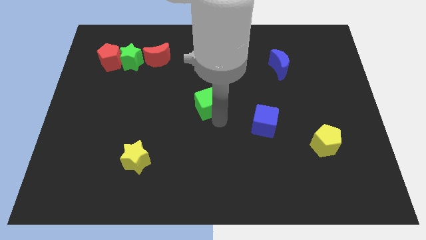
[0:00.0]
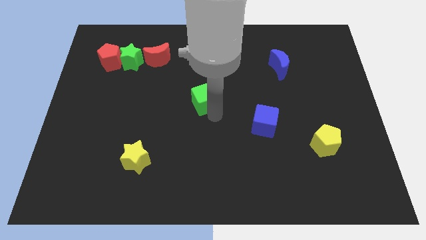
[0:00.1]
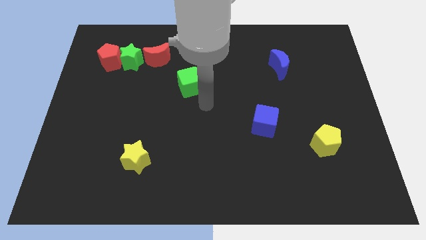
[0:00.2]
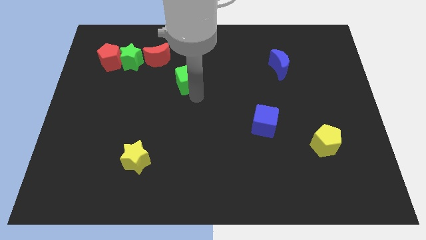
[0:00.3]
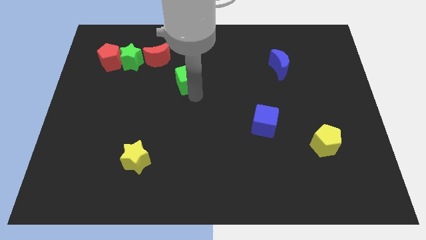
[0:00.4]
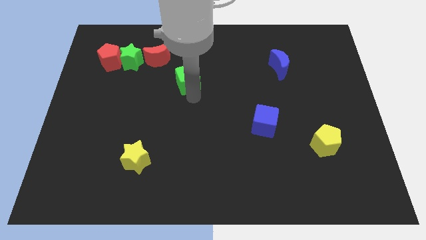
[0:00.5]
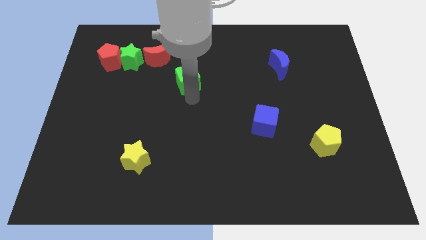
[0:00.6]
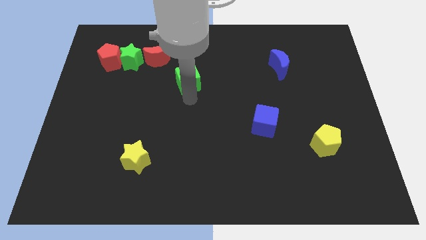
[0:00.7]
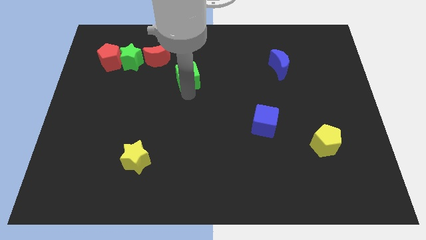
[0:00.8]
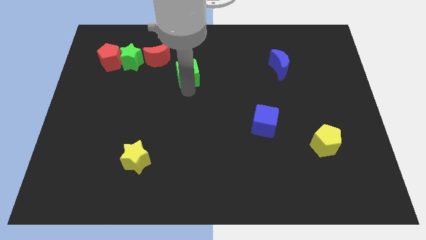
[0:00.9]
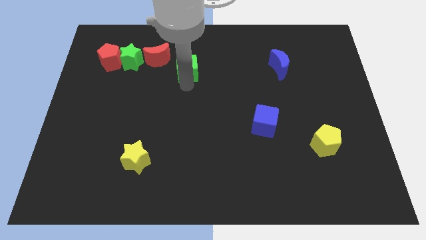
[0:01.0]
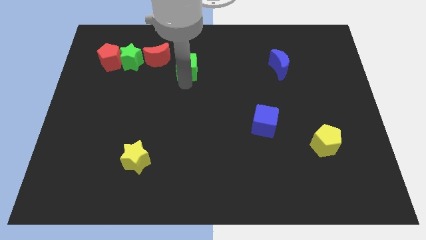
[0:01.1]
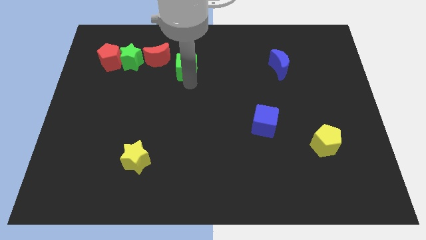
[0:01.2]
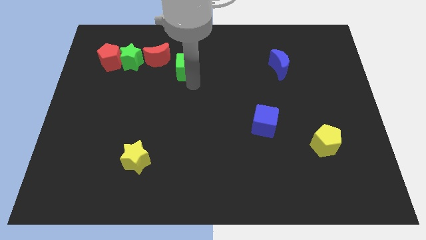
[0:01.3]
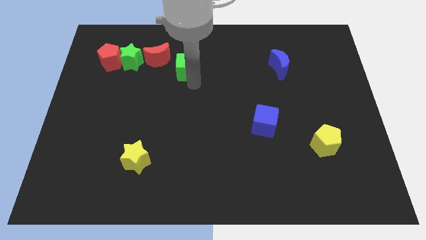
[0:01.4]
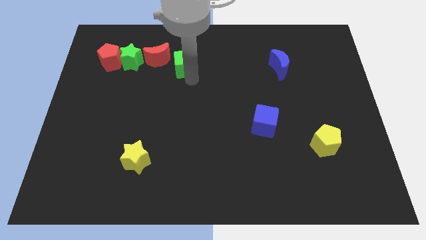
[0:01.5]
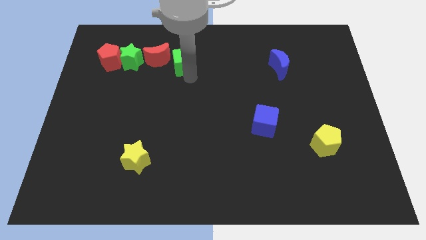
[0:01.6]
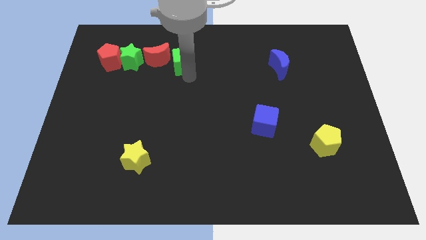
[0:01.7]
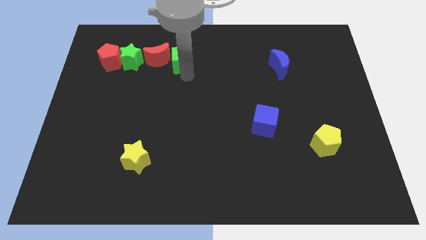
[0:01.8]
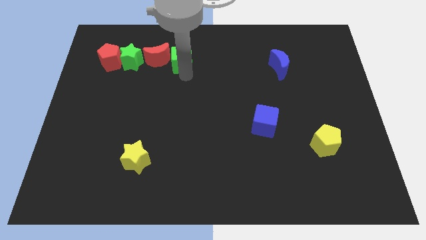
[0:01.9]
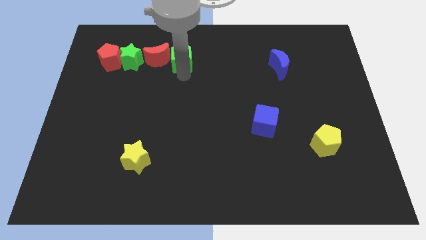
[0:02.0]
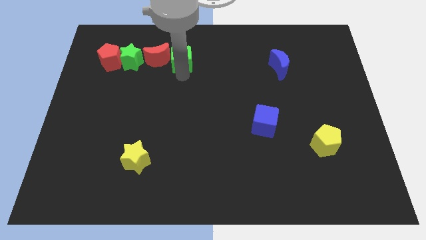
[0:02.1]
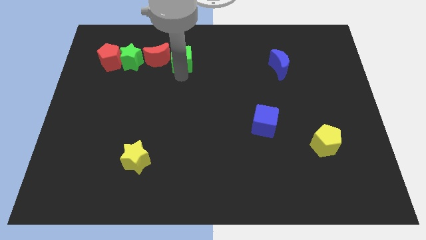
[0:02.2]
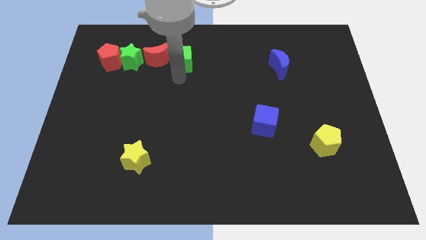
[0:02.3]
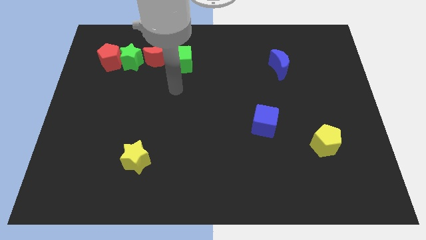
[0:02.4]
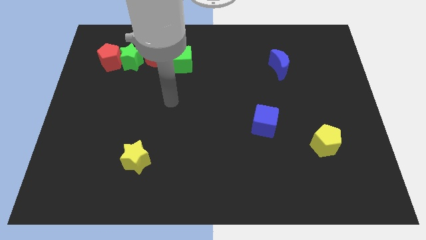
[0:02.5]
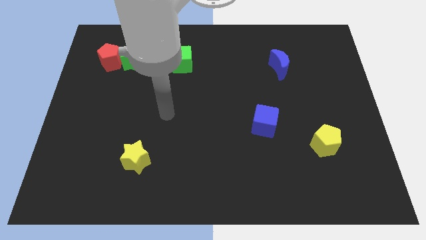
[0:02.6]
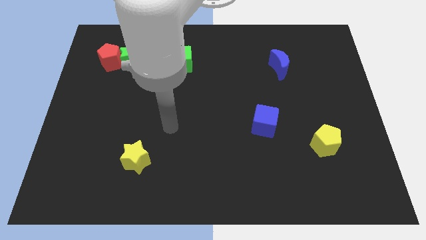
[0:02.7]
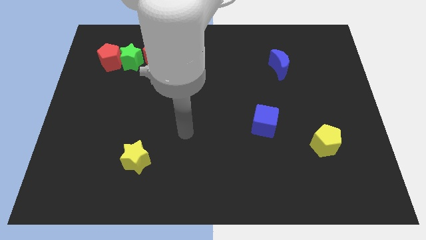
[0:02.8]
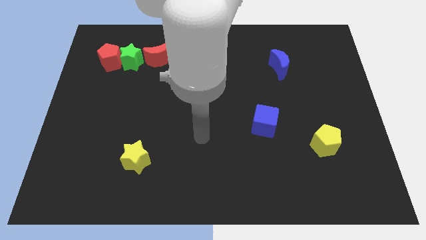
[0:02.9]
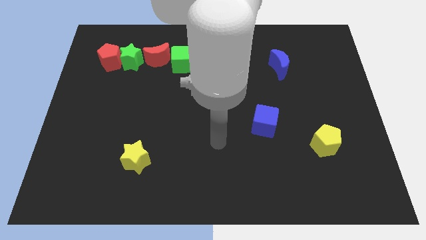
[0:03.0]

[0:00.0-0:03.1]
move green cube near to the red moon

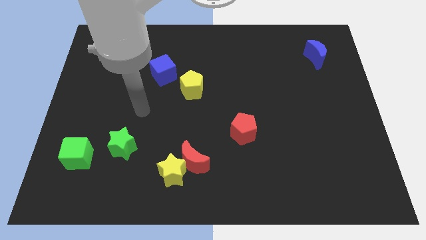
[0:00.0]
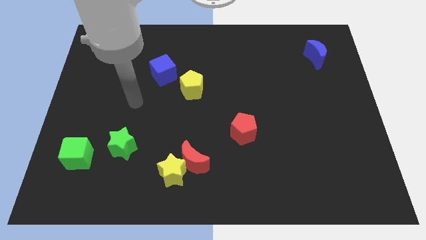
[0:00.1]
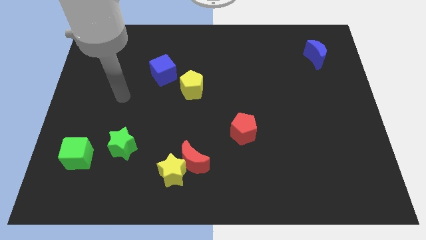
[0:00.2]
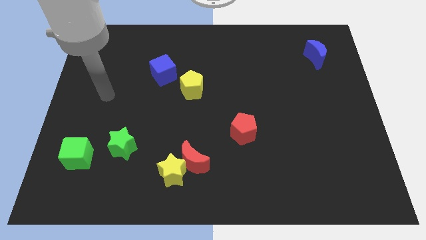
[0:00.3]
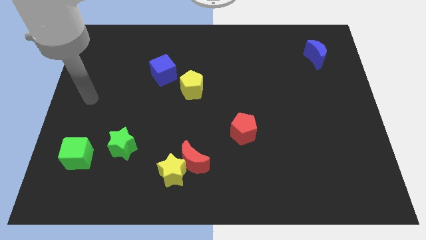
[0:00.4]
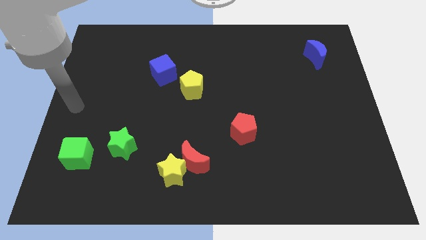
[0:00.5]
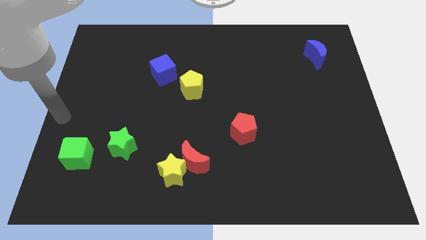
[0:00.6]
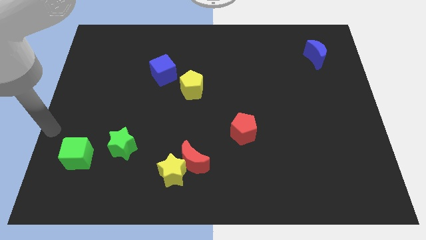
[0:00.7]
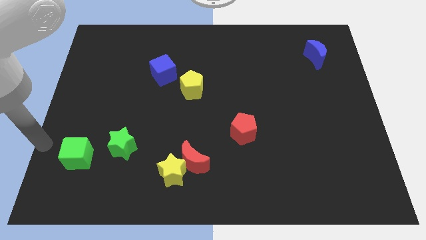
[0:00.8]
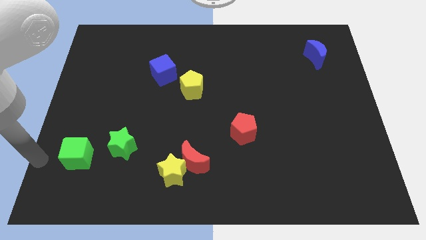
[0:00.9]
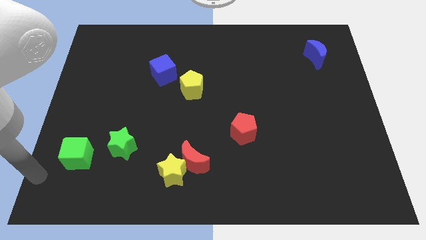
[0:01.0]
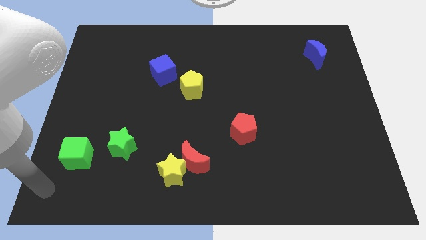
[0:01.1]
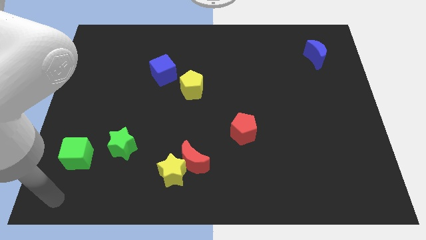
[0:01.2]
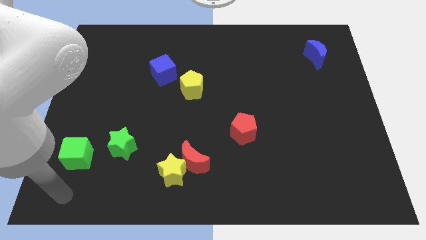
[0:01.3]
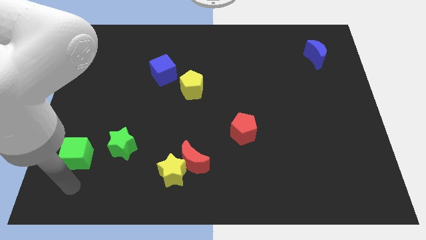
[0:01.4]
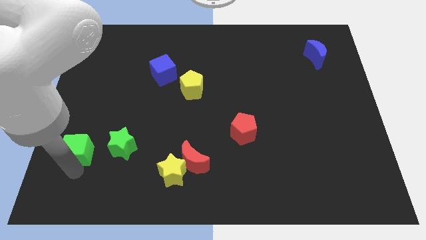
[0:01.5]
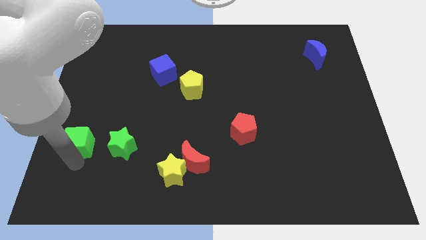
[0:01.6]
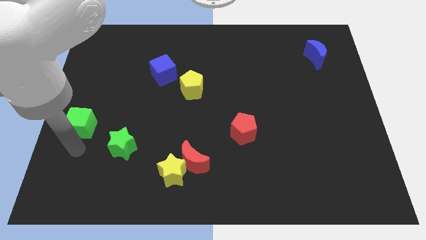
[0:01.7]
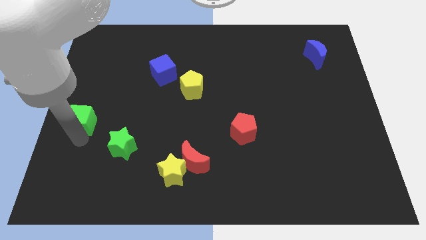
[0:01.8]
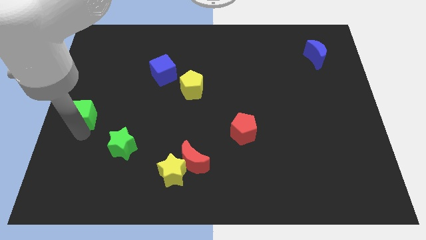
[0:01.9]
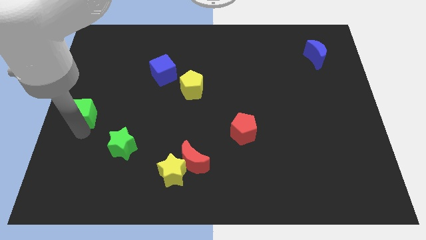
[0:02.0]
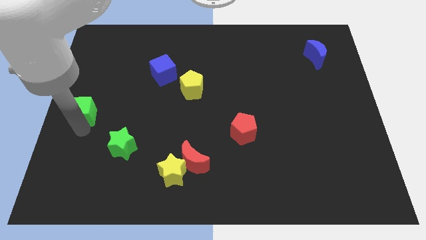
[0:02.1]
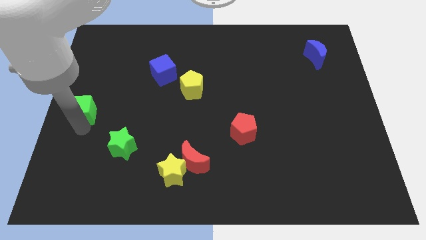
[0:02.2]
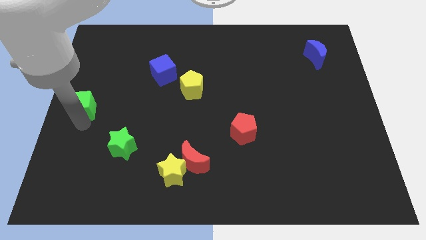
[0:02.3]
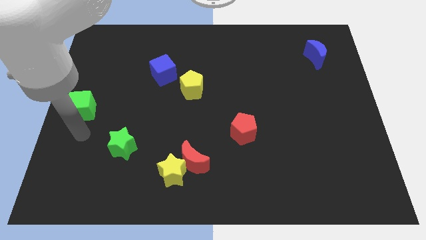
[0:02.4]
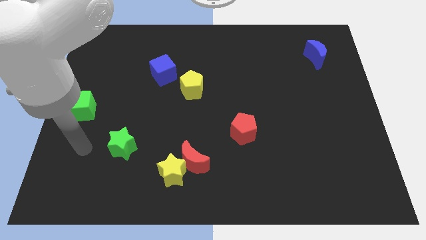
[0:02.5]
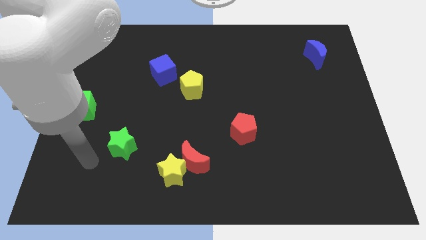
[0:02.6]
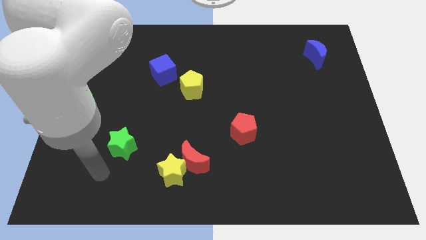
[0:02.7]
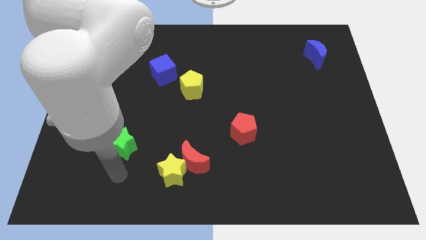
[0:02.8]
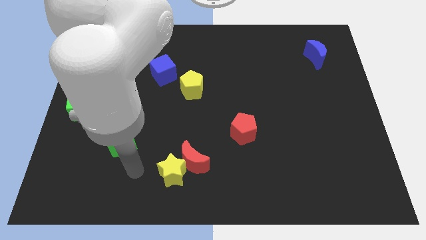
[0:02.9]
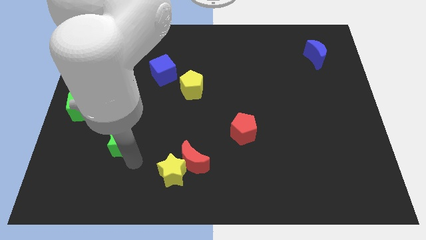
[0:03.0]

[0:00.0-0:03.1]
push the green blocks towards the left center of the board

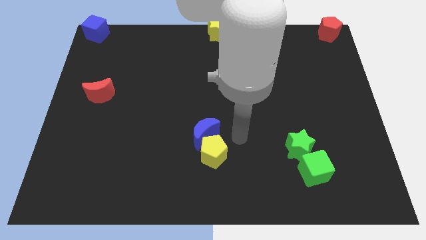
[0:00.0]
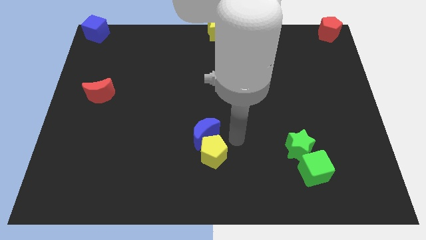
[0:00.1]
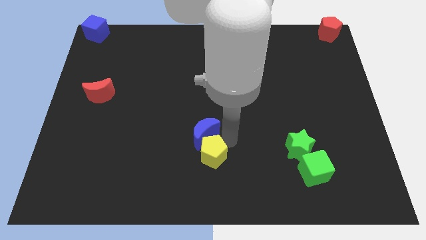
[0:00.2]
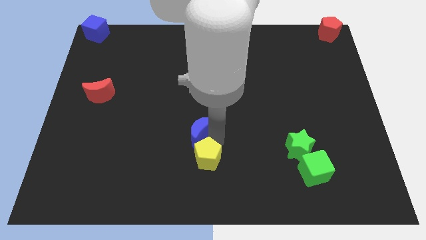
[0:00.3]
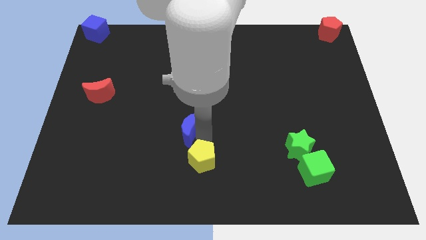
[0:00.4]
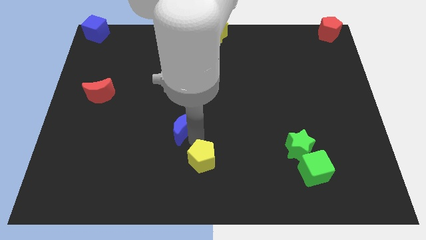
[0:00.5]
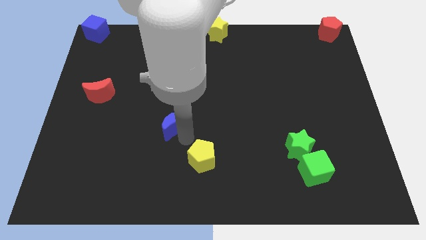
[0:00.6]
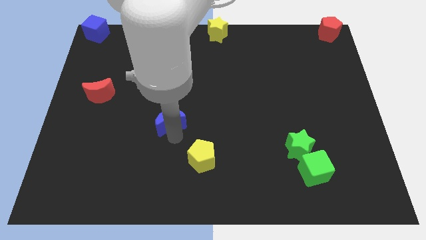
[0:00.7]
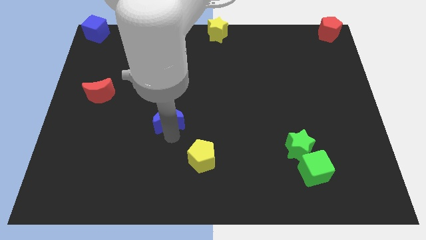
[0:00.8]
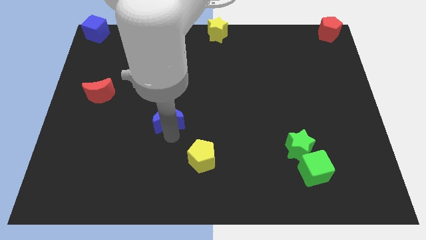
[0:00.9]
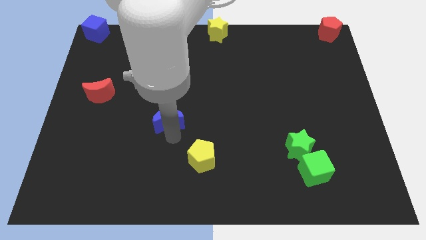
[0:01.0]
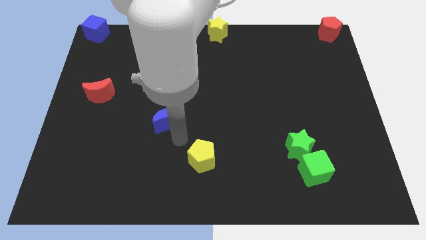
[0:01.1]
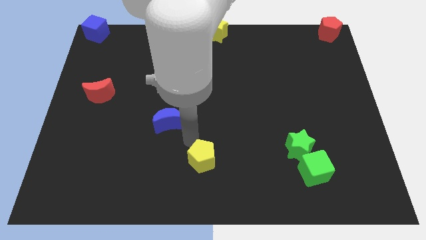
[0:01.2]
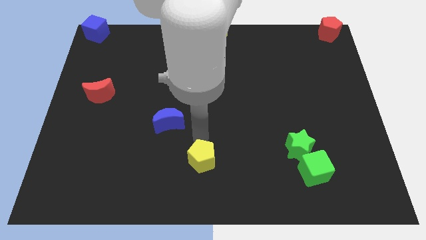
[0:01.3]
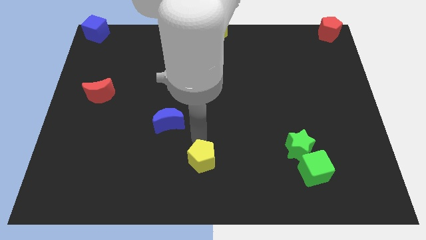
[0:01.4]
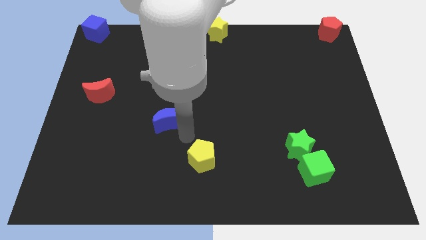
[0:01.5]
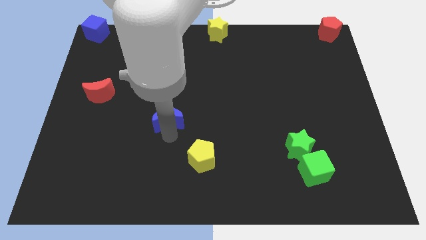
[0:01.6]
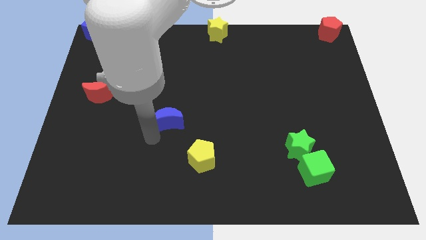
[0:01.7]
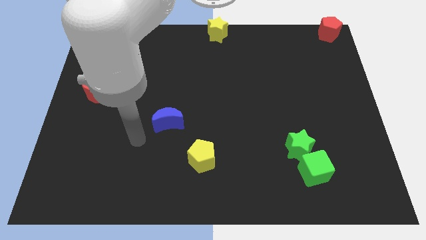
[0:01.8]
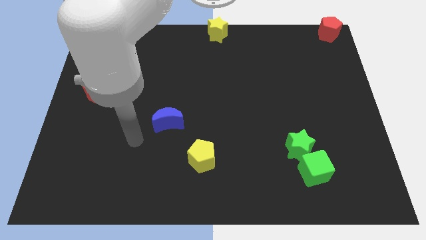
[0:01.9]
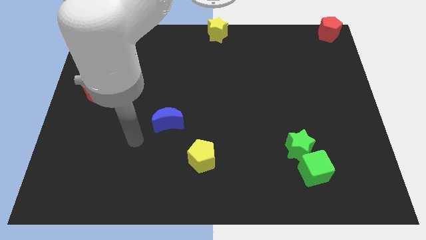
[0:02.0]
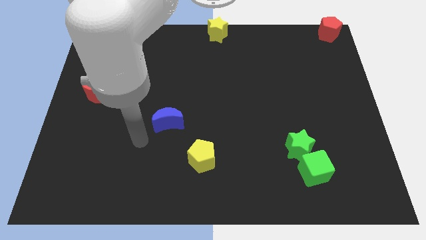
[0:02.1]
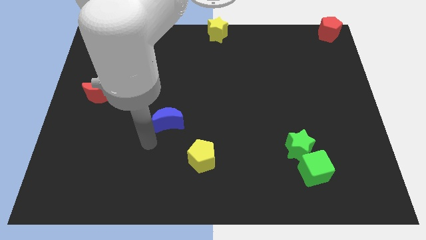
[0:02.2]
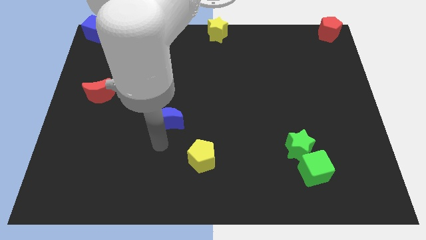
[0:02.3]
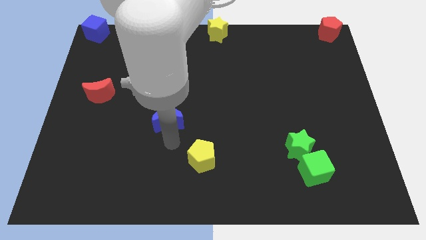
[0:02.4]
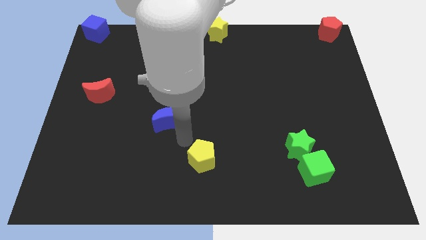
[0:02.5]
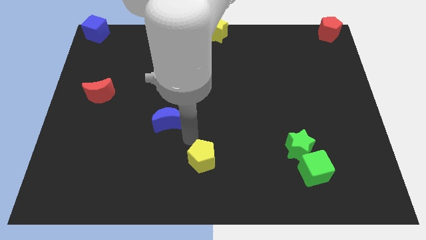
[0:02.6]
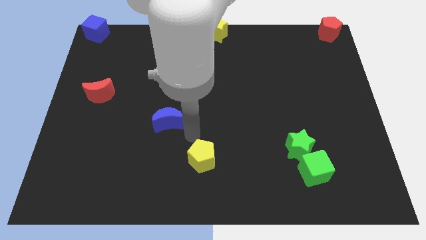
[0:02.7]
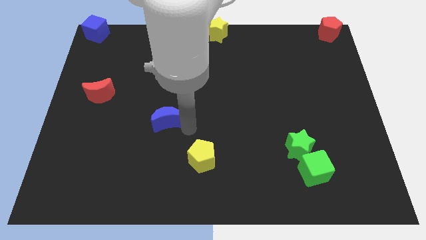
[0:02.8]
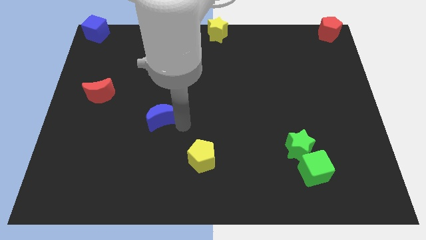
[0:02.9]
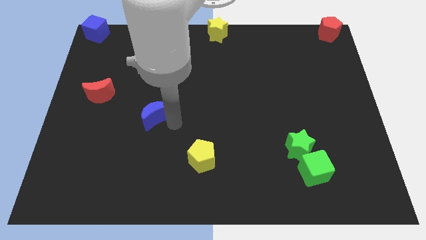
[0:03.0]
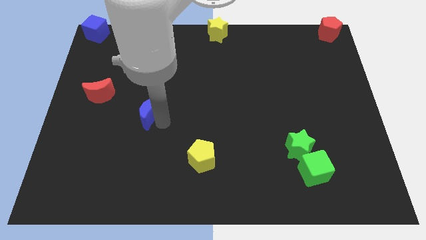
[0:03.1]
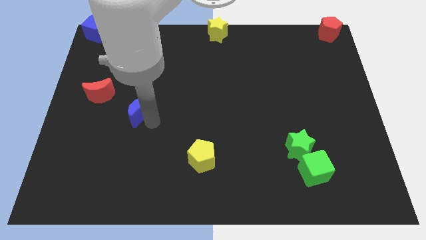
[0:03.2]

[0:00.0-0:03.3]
separate the blue crescent from the yellow pentagon
